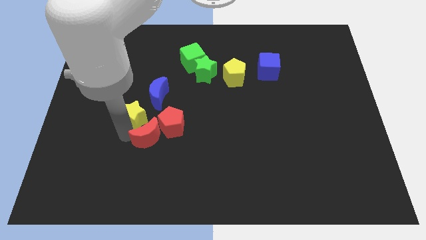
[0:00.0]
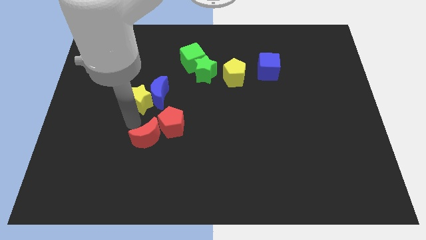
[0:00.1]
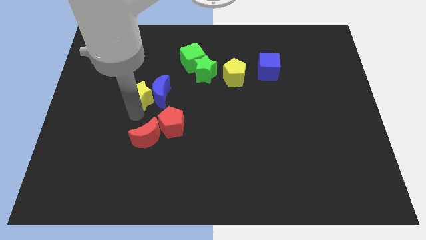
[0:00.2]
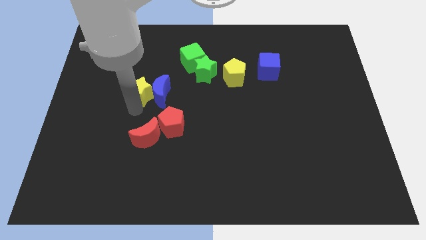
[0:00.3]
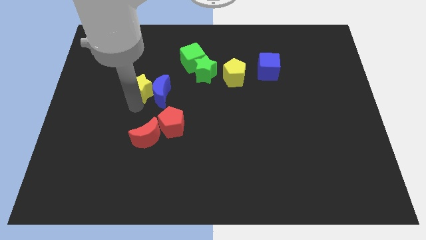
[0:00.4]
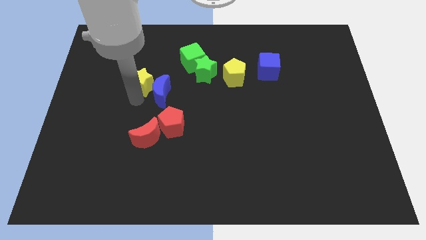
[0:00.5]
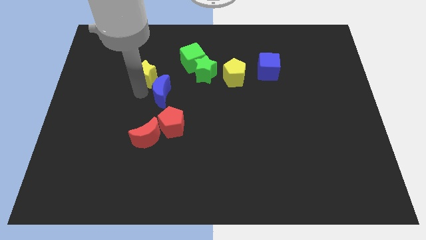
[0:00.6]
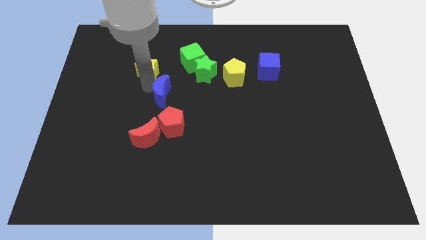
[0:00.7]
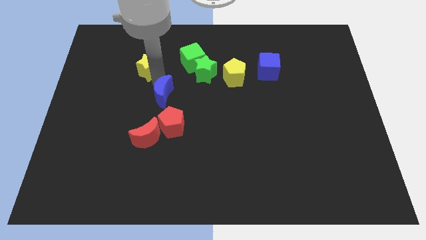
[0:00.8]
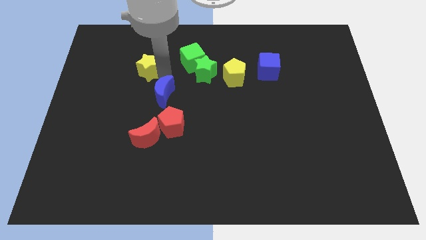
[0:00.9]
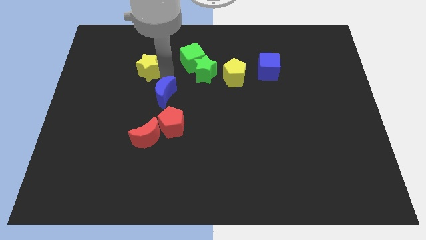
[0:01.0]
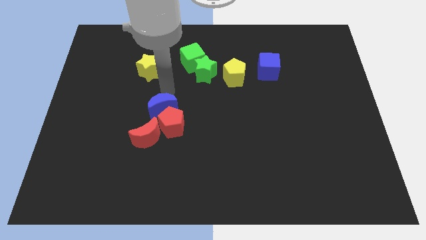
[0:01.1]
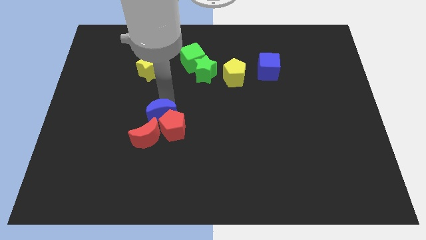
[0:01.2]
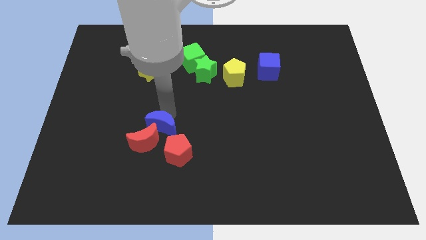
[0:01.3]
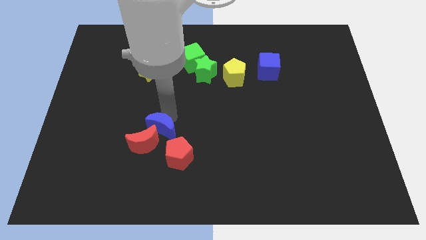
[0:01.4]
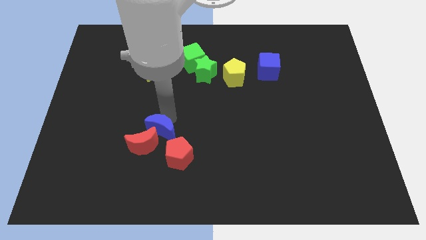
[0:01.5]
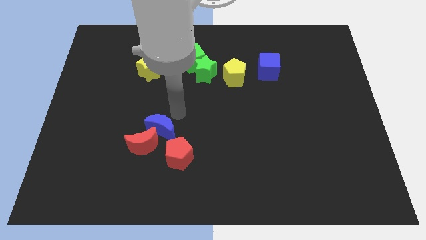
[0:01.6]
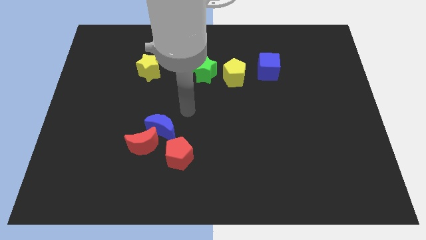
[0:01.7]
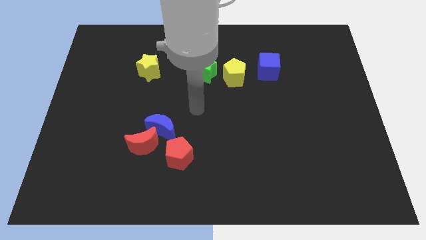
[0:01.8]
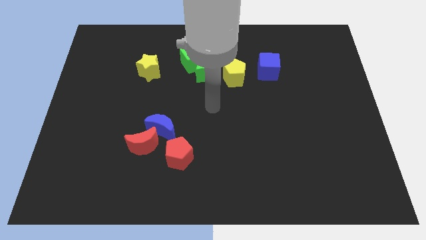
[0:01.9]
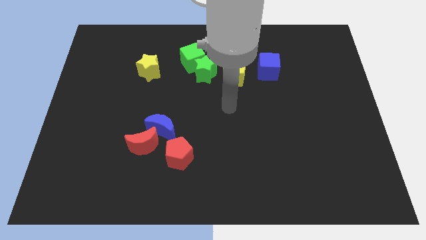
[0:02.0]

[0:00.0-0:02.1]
push the yellow star towards top

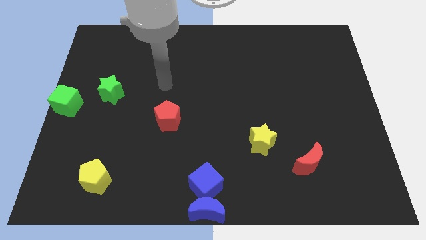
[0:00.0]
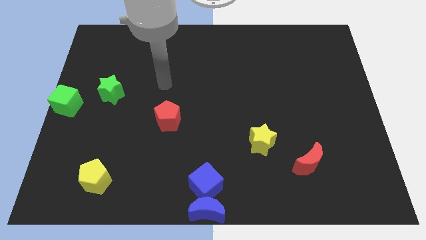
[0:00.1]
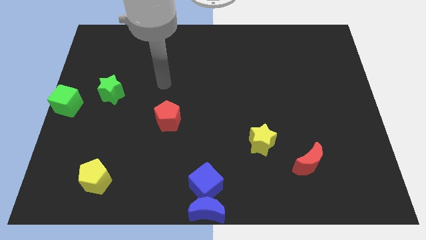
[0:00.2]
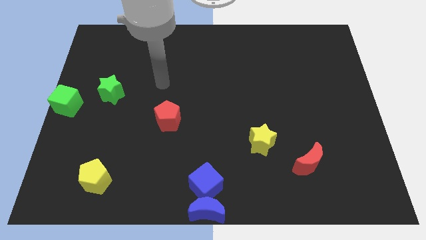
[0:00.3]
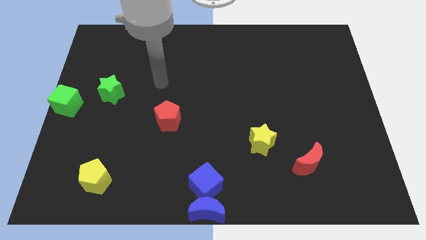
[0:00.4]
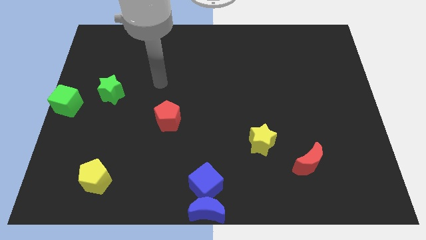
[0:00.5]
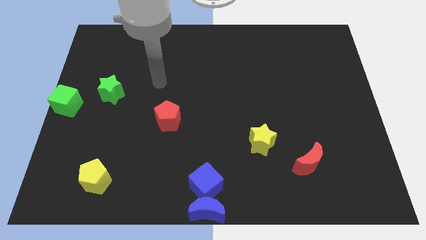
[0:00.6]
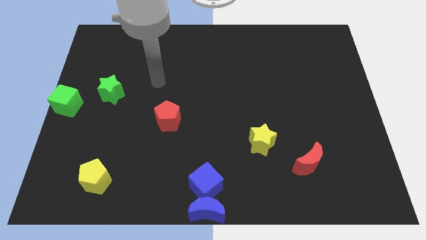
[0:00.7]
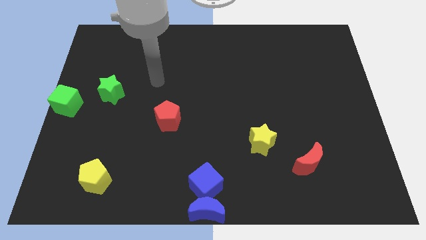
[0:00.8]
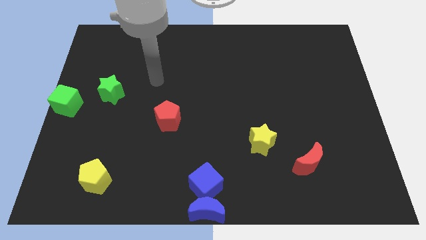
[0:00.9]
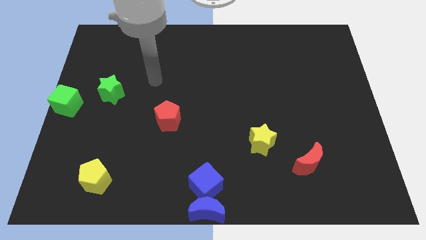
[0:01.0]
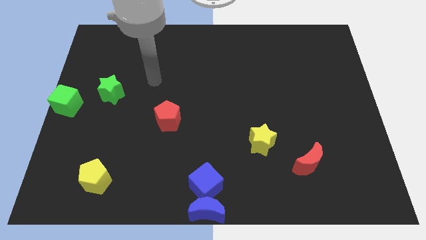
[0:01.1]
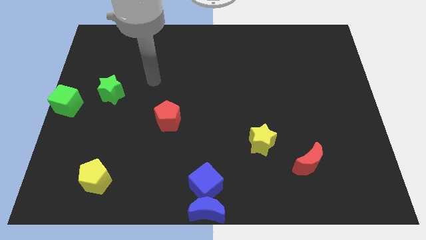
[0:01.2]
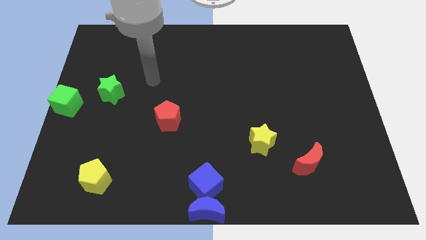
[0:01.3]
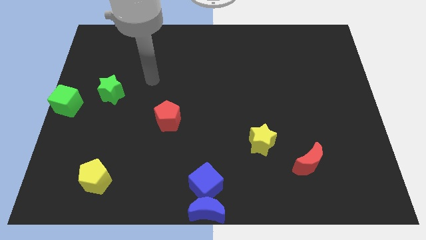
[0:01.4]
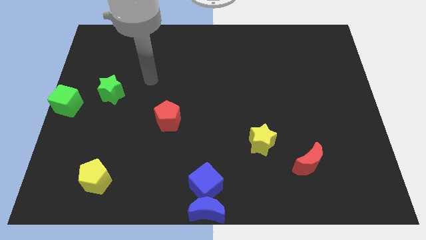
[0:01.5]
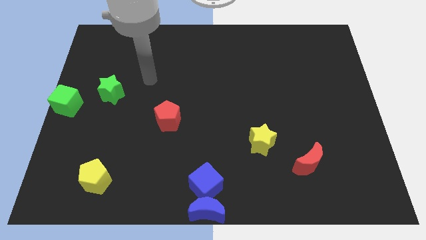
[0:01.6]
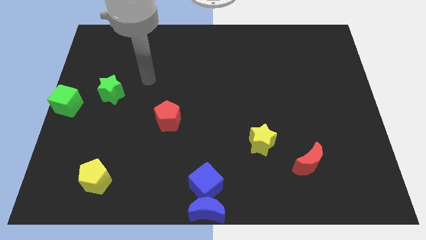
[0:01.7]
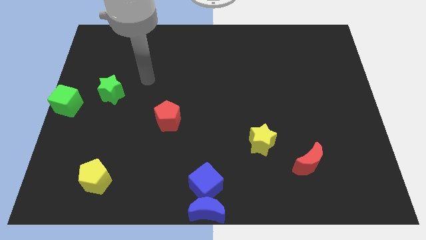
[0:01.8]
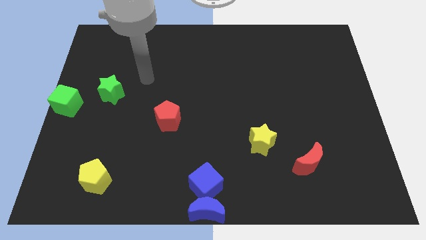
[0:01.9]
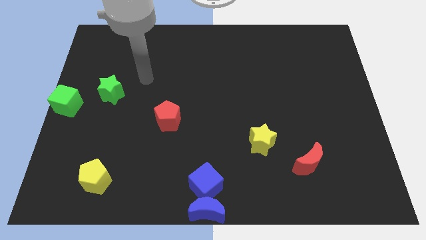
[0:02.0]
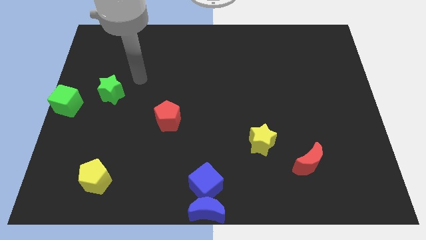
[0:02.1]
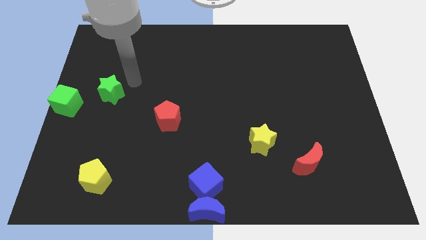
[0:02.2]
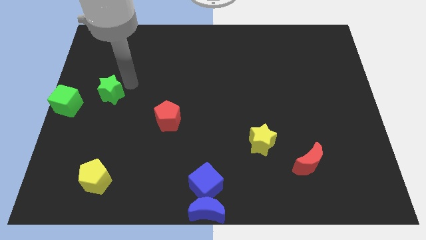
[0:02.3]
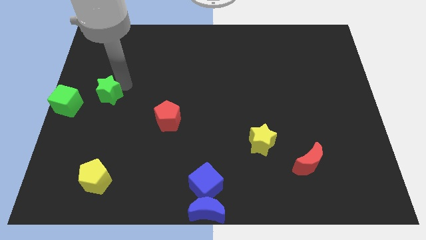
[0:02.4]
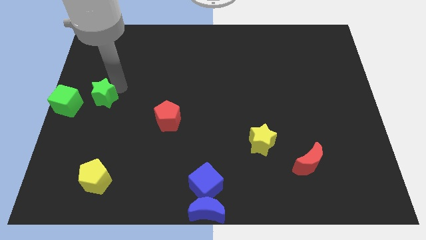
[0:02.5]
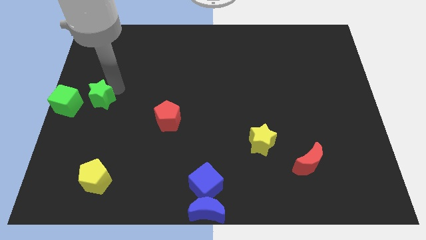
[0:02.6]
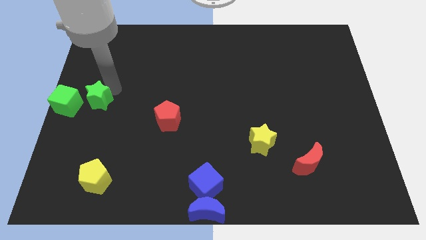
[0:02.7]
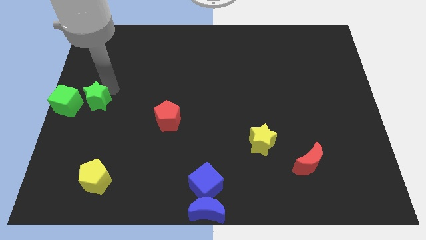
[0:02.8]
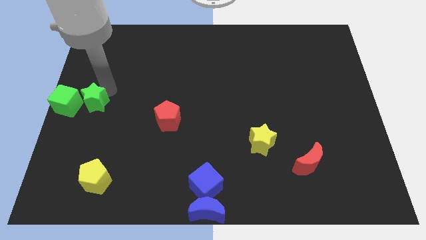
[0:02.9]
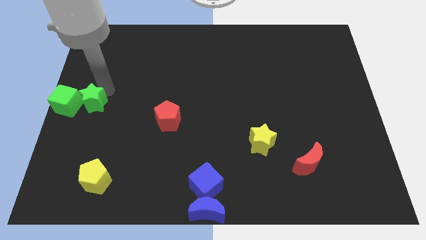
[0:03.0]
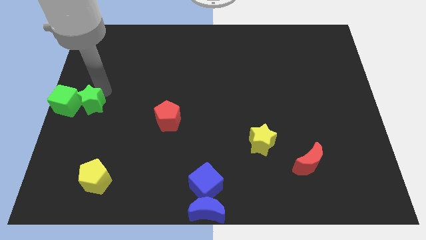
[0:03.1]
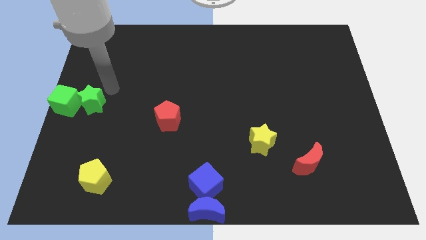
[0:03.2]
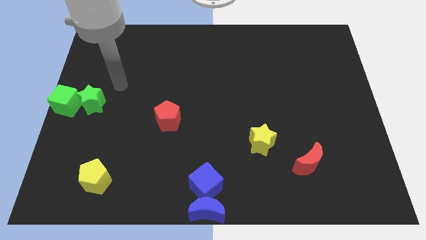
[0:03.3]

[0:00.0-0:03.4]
push the green star to the right of the green cube

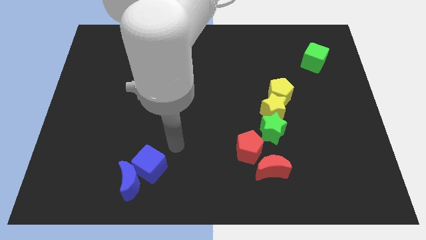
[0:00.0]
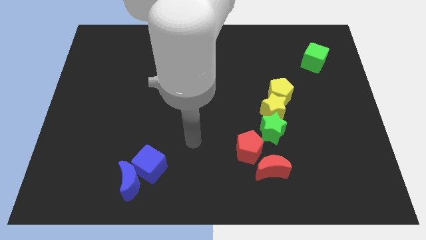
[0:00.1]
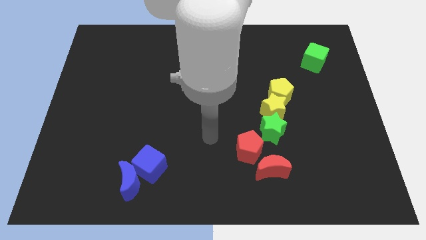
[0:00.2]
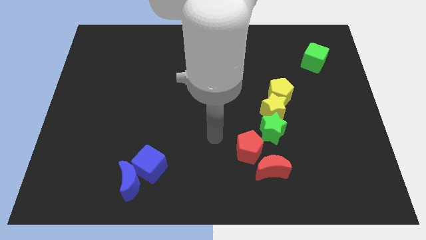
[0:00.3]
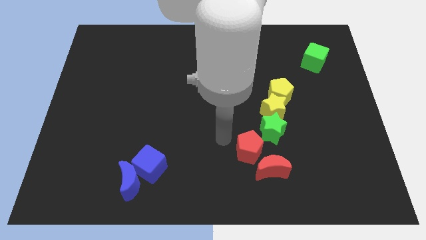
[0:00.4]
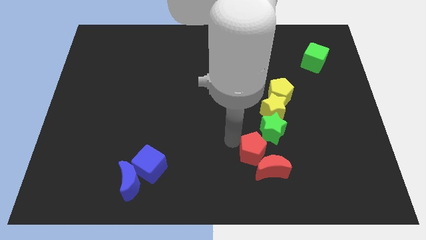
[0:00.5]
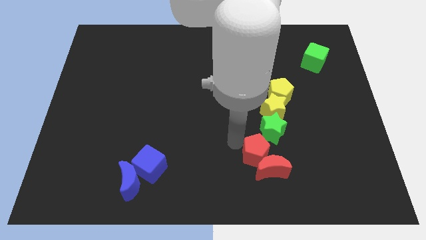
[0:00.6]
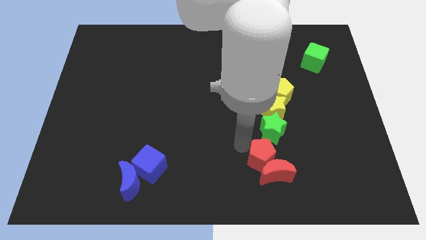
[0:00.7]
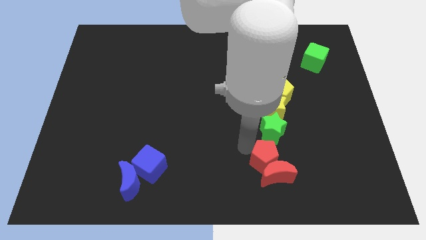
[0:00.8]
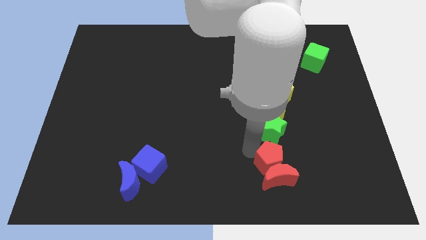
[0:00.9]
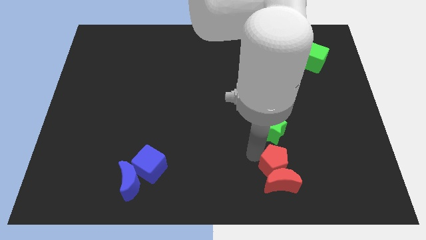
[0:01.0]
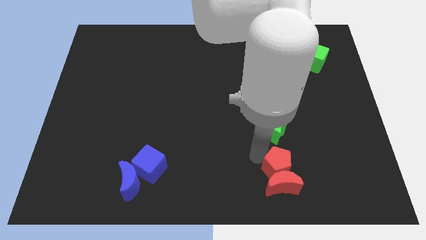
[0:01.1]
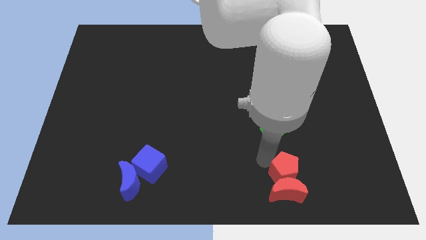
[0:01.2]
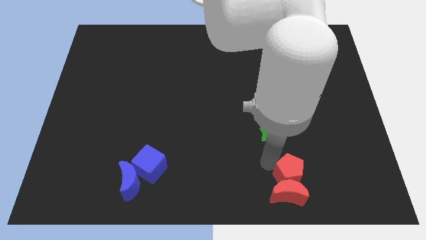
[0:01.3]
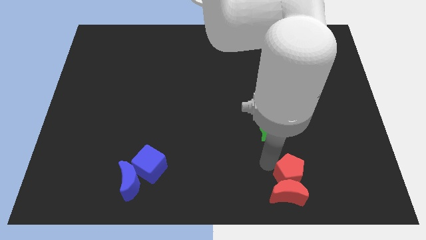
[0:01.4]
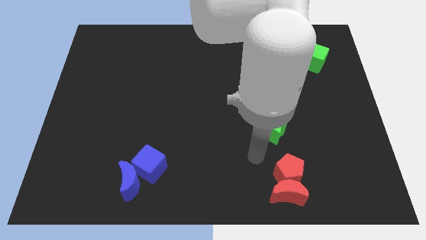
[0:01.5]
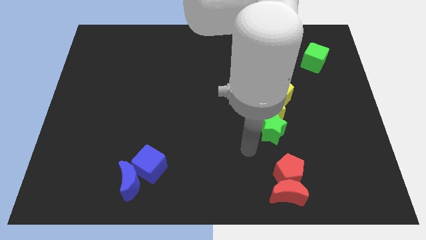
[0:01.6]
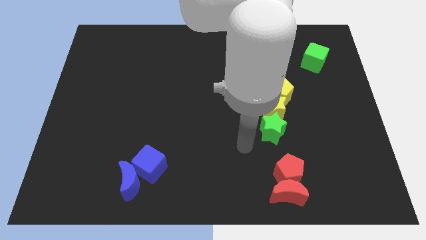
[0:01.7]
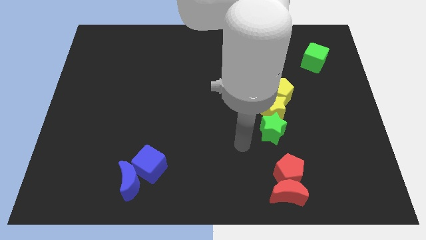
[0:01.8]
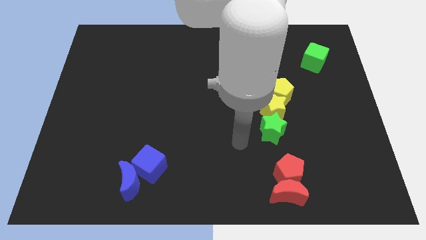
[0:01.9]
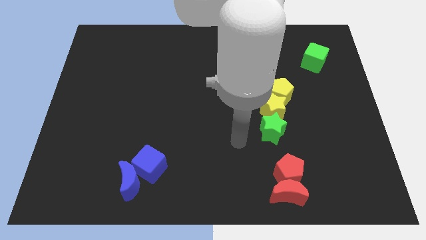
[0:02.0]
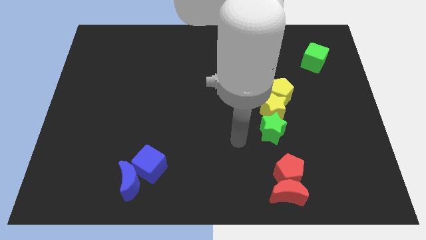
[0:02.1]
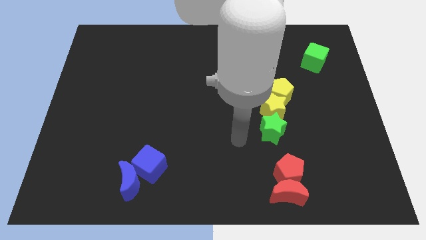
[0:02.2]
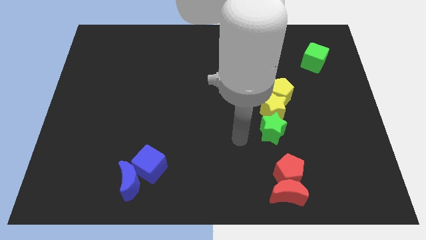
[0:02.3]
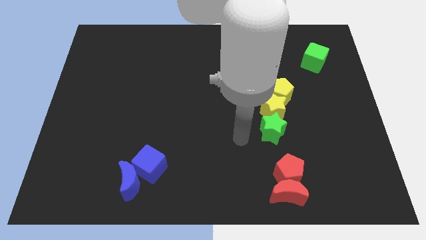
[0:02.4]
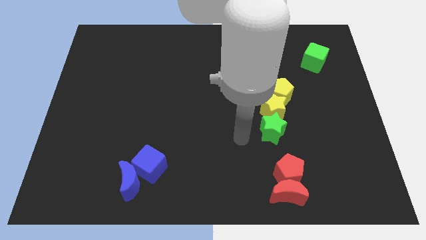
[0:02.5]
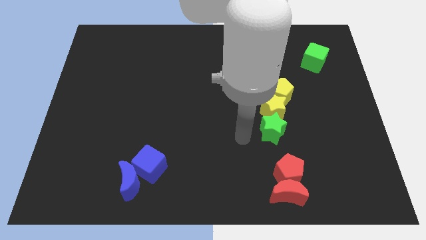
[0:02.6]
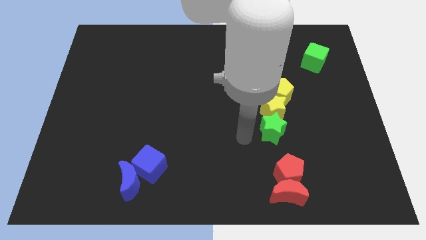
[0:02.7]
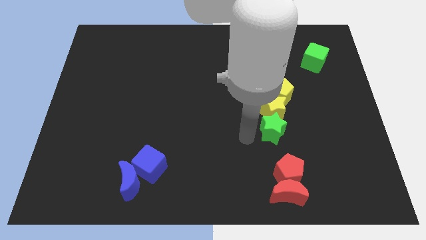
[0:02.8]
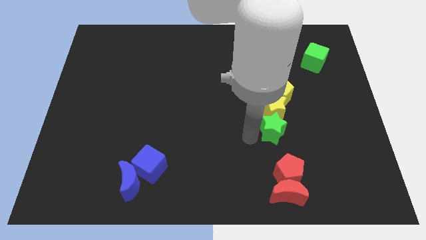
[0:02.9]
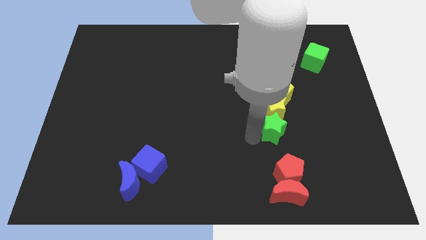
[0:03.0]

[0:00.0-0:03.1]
push red pentagon and red moon slightly to the bottom

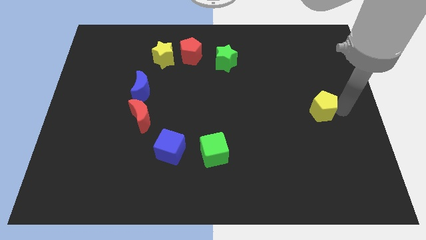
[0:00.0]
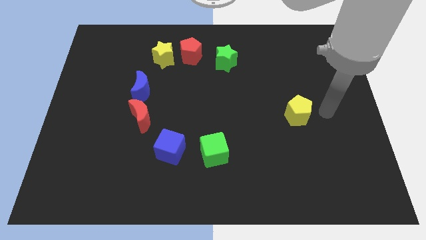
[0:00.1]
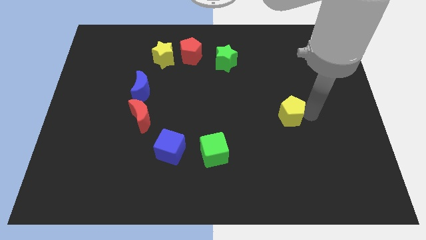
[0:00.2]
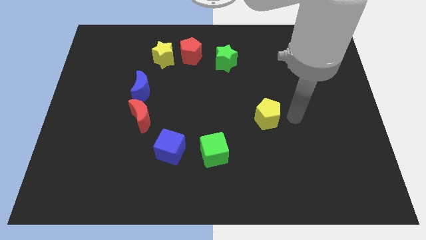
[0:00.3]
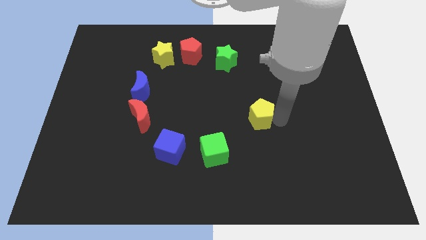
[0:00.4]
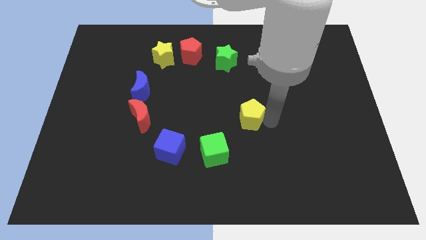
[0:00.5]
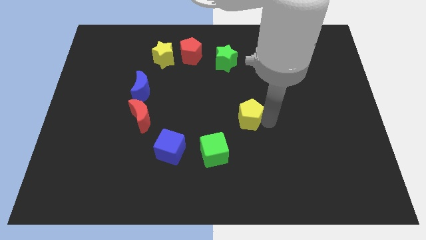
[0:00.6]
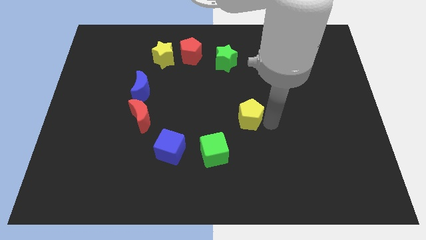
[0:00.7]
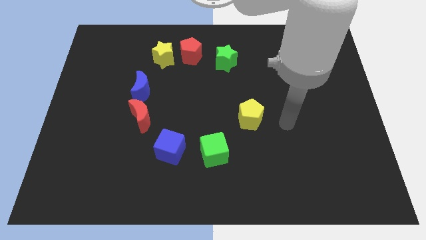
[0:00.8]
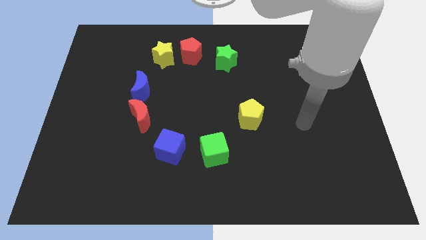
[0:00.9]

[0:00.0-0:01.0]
move yellow pentagon towards the center of the board
